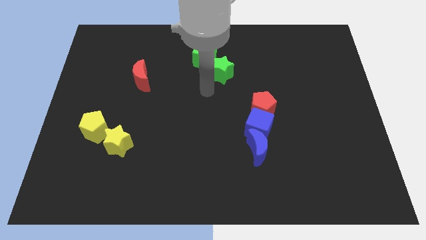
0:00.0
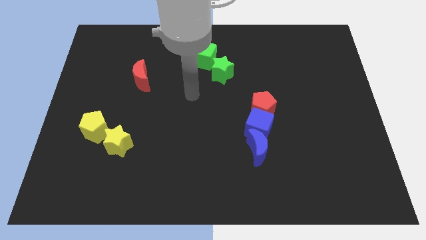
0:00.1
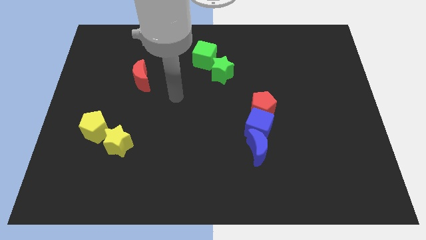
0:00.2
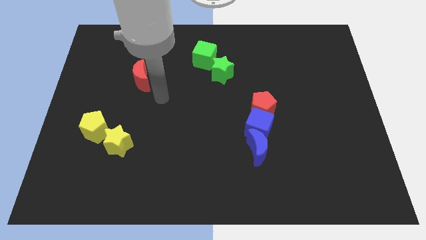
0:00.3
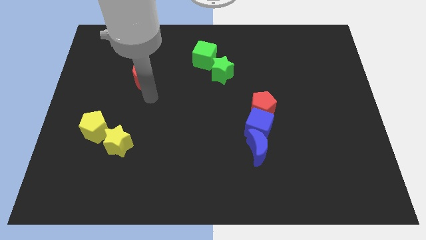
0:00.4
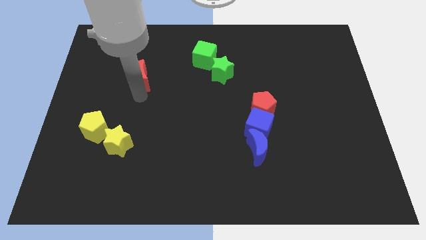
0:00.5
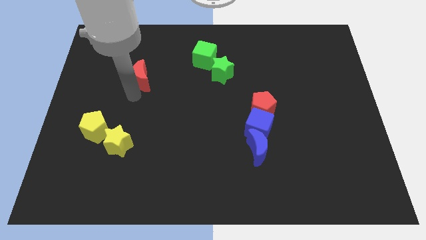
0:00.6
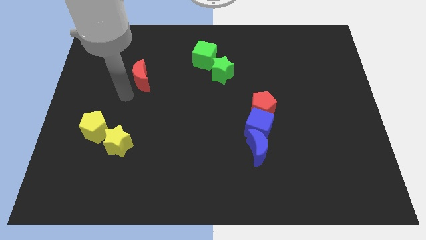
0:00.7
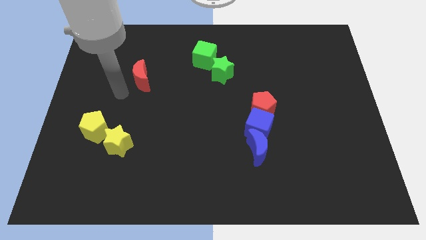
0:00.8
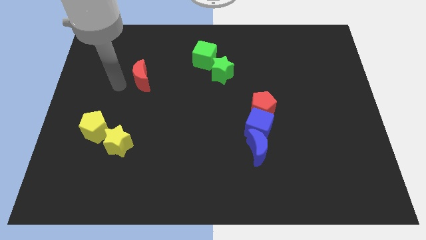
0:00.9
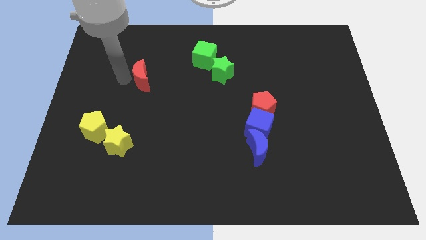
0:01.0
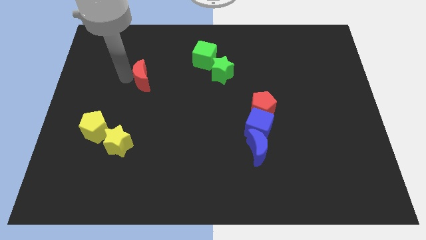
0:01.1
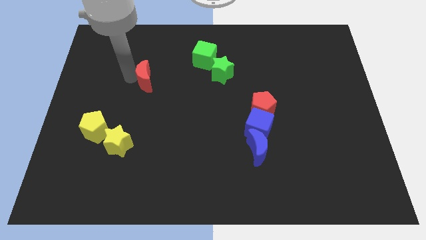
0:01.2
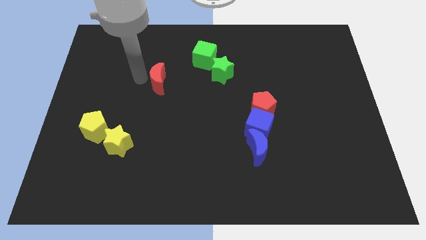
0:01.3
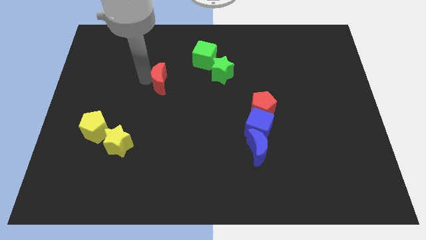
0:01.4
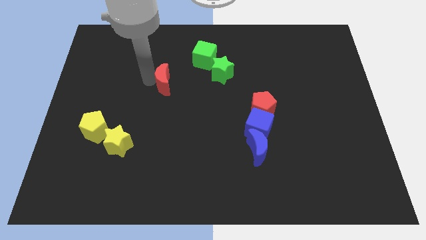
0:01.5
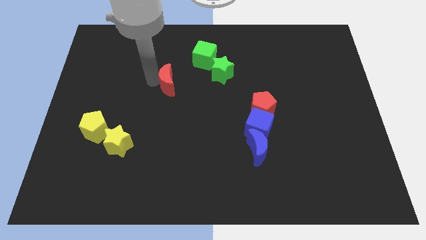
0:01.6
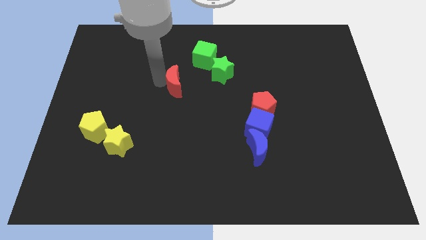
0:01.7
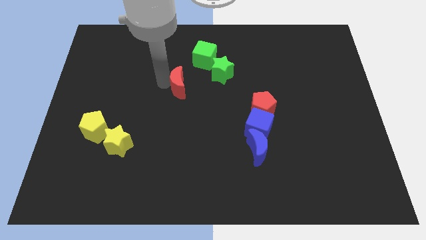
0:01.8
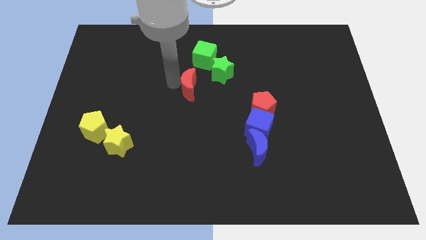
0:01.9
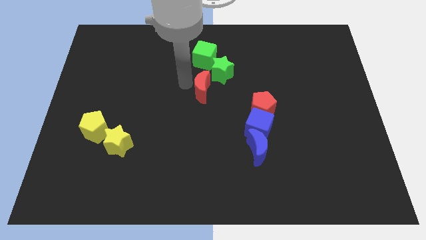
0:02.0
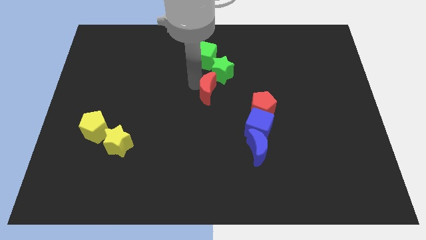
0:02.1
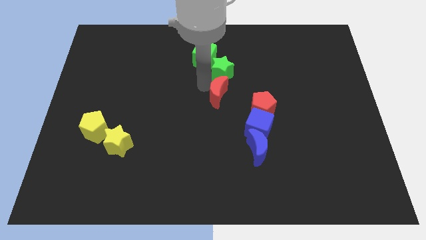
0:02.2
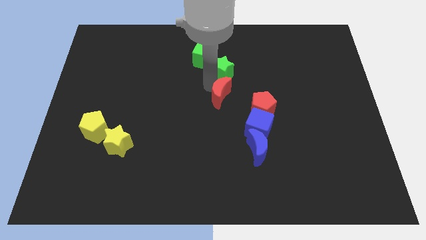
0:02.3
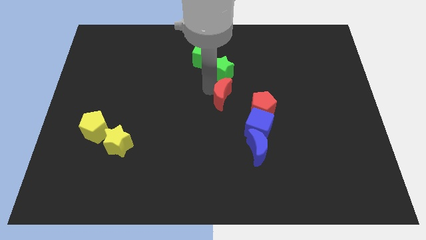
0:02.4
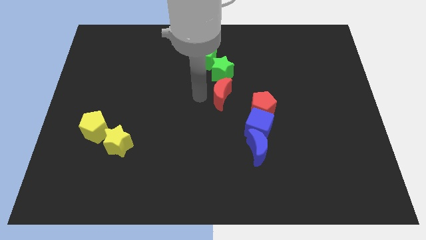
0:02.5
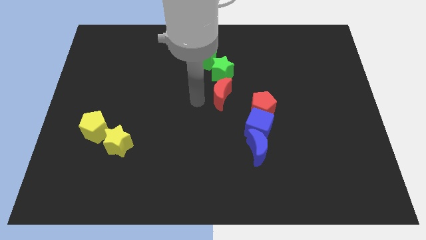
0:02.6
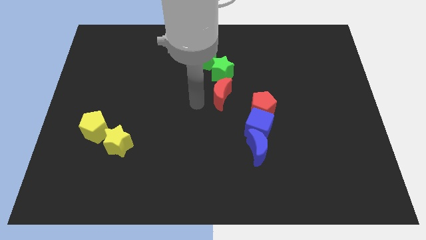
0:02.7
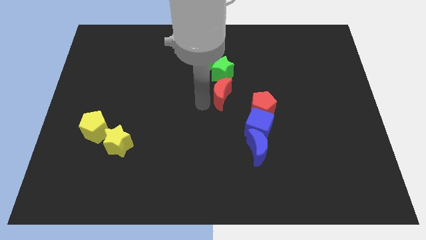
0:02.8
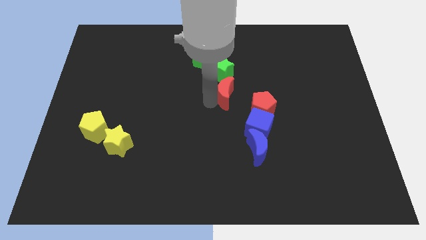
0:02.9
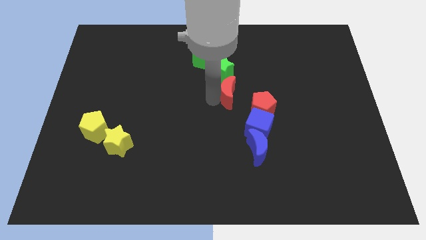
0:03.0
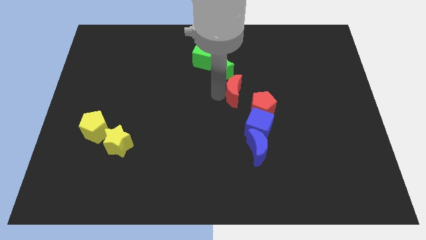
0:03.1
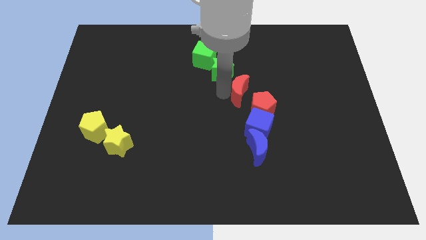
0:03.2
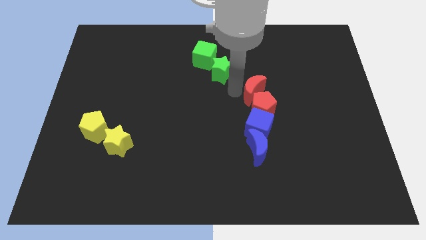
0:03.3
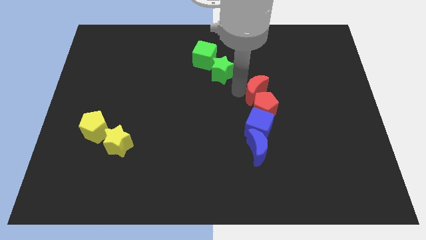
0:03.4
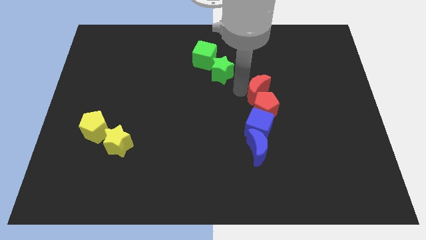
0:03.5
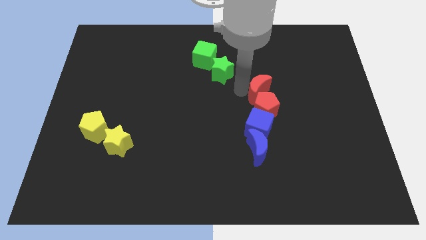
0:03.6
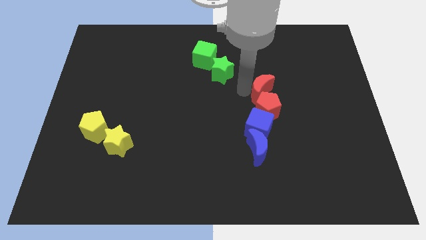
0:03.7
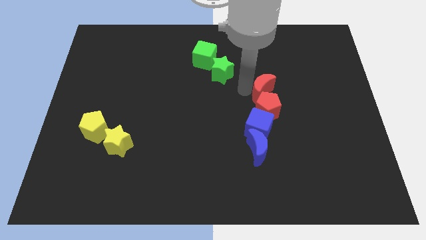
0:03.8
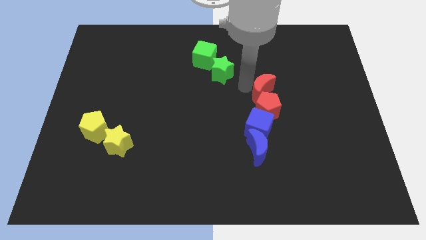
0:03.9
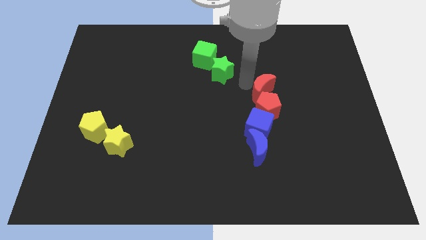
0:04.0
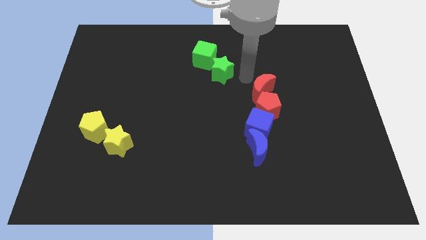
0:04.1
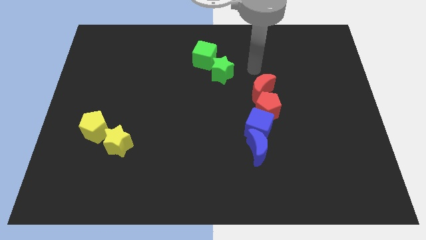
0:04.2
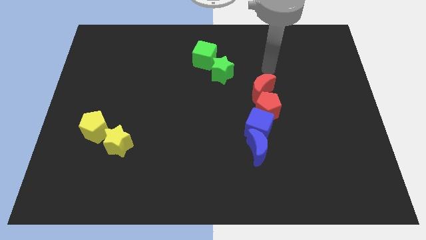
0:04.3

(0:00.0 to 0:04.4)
move the red crescent above the red pentagon

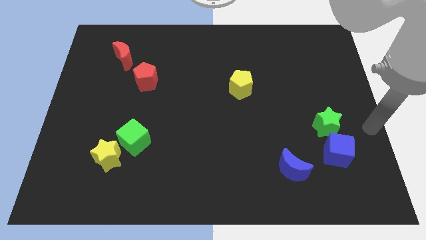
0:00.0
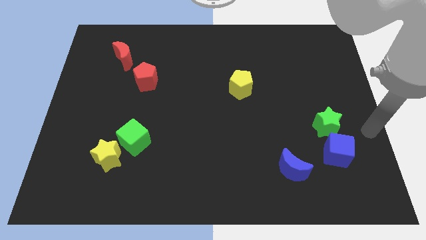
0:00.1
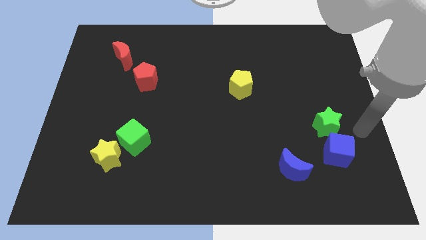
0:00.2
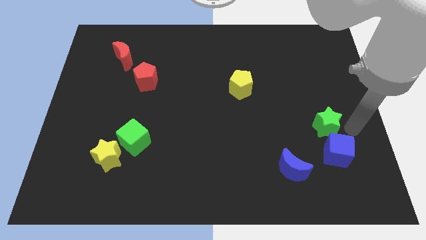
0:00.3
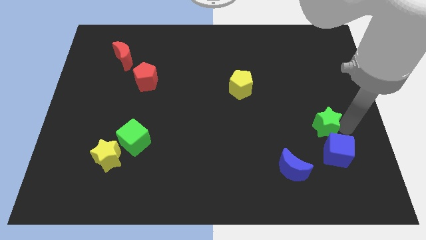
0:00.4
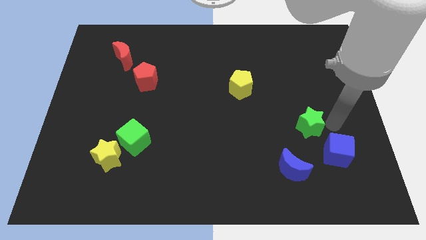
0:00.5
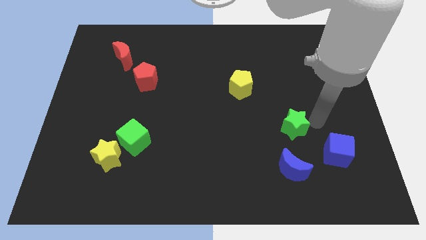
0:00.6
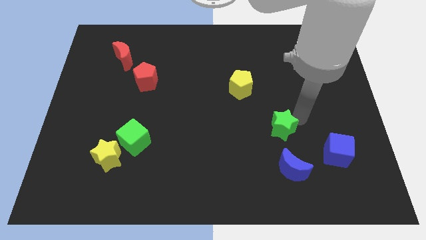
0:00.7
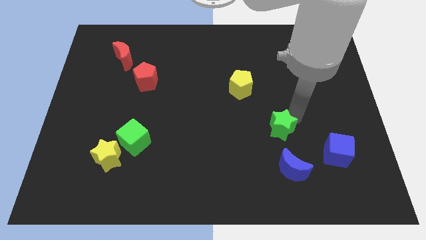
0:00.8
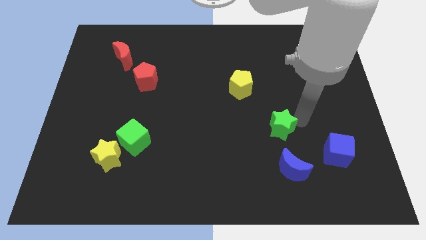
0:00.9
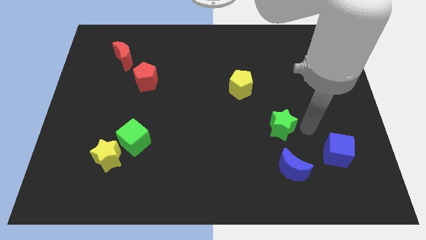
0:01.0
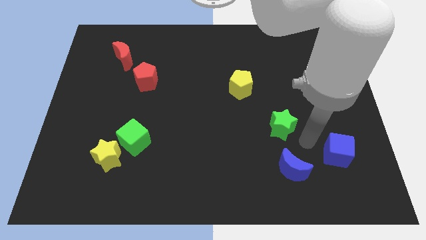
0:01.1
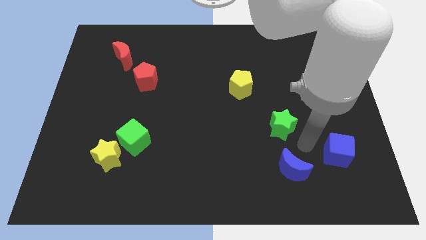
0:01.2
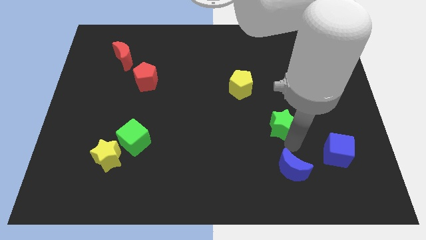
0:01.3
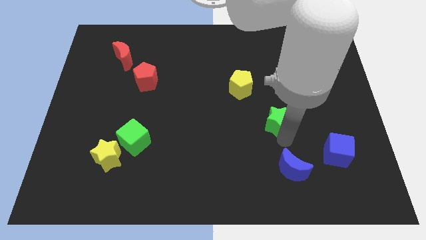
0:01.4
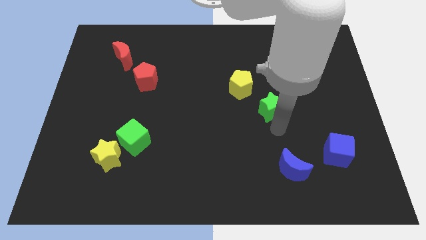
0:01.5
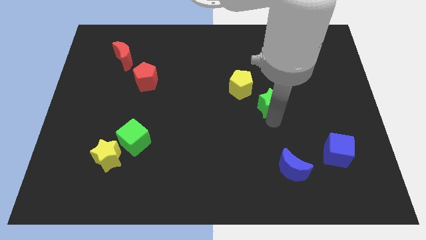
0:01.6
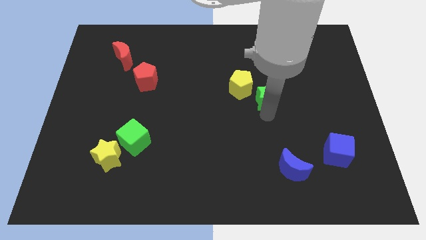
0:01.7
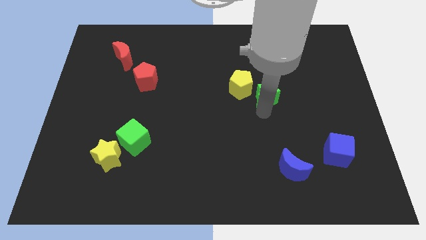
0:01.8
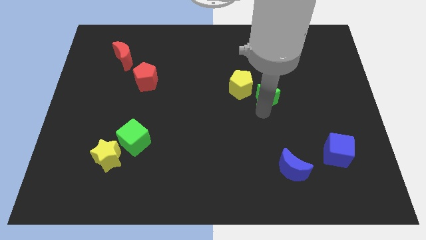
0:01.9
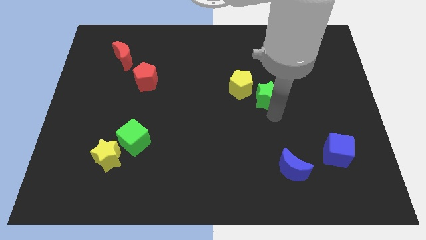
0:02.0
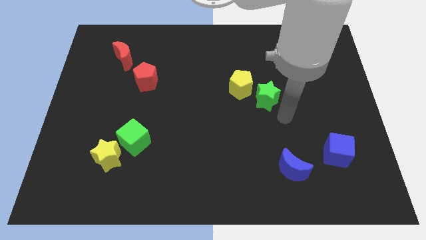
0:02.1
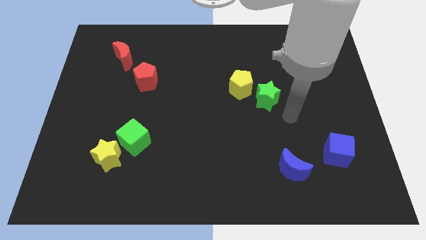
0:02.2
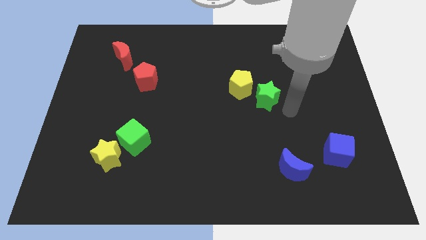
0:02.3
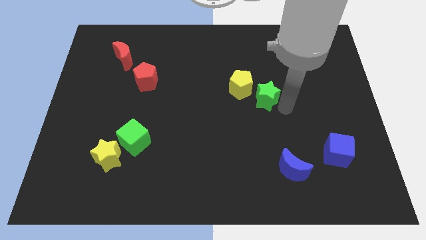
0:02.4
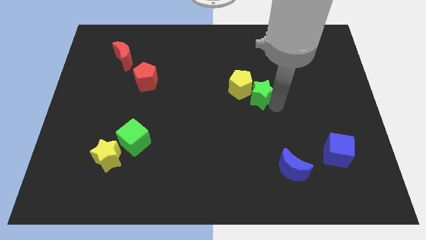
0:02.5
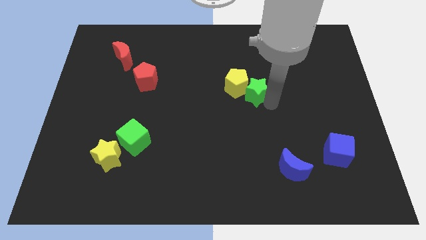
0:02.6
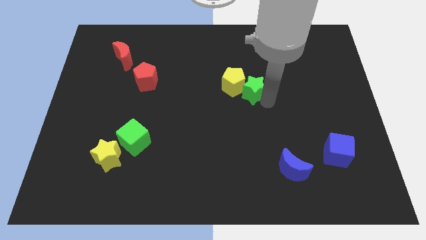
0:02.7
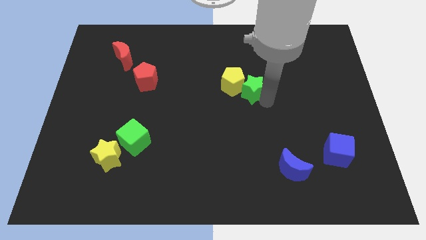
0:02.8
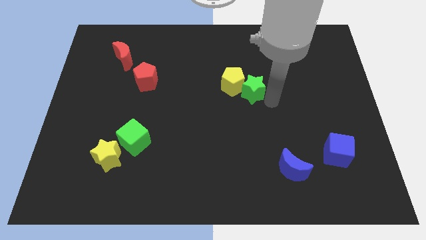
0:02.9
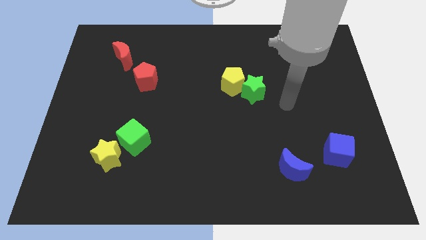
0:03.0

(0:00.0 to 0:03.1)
push the green star into the yellow pentagon

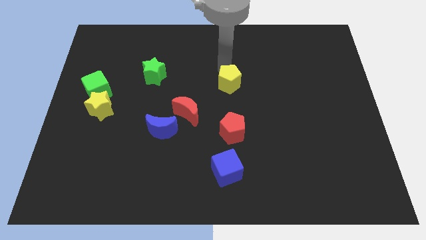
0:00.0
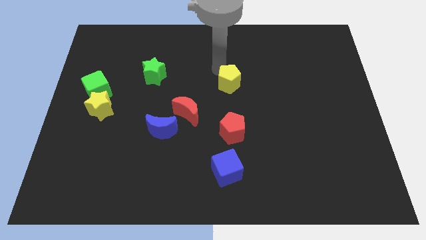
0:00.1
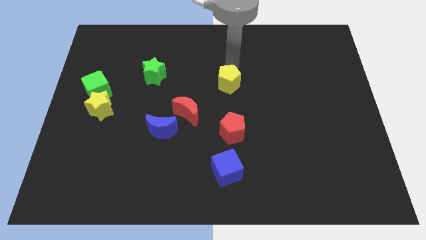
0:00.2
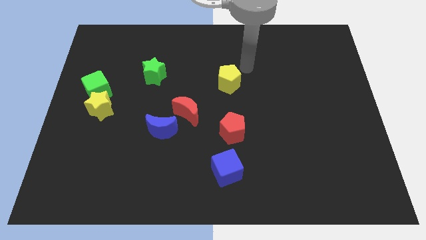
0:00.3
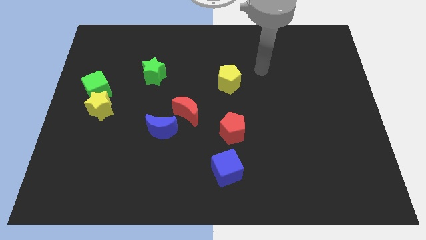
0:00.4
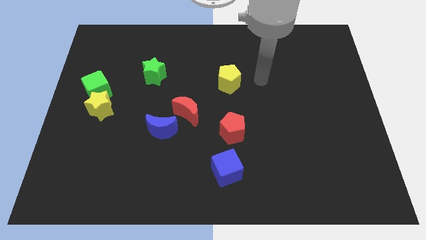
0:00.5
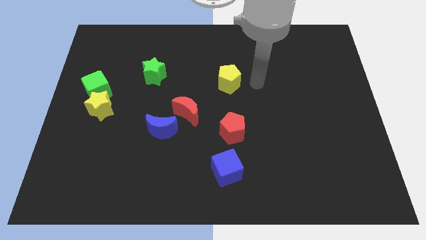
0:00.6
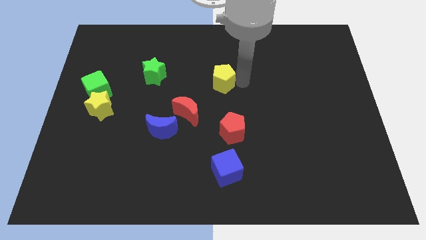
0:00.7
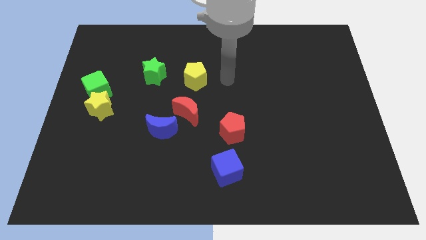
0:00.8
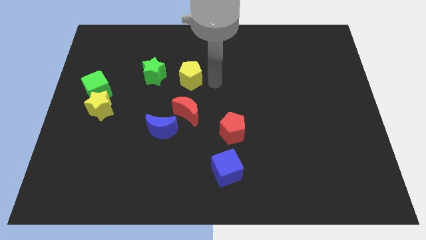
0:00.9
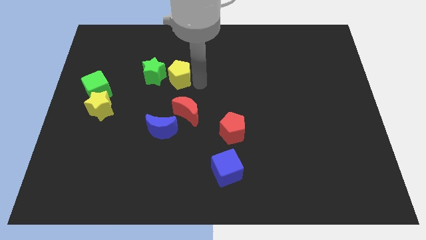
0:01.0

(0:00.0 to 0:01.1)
push the yellow pentagon parallel right to the green star

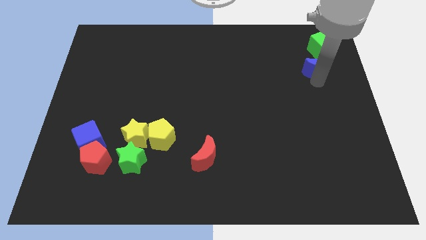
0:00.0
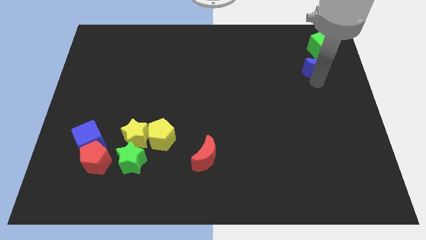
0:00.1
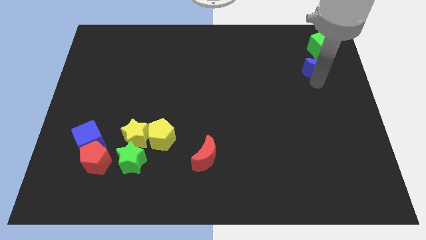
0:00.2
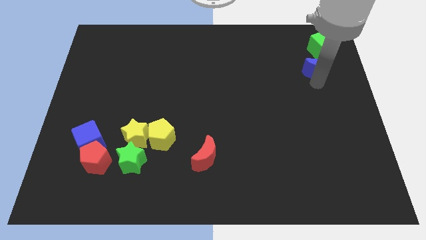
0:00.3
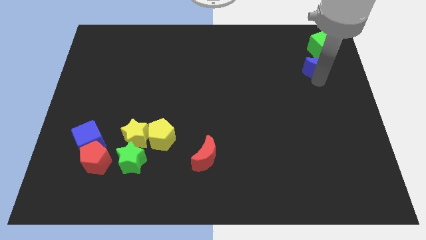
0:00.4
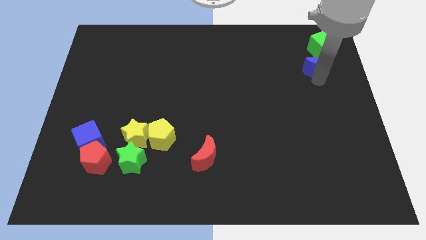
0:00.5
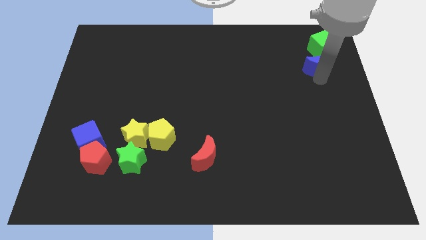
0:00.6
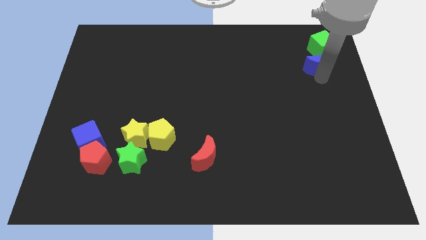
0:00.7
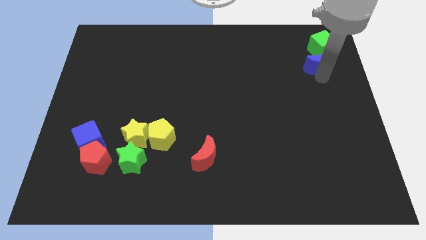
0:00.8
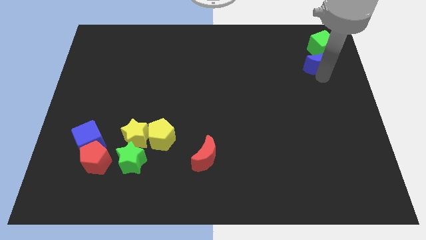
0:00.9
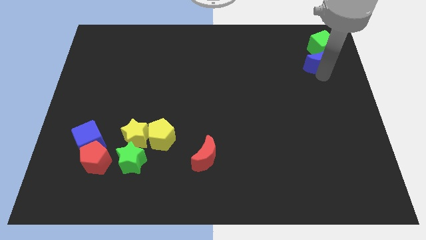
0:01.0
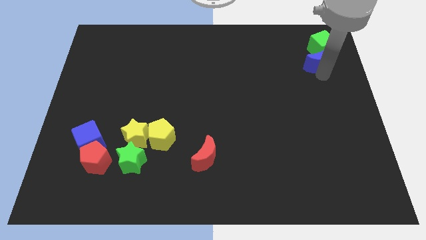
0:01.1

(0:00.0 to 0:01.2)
place the blue crescent close to the green cube
